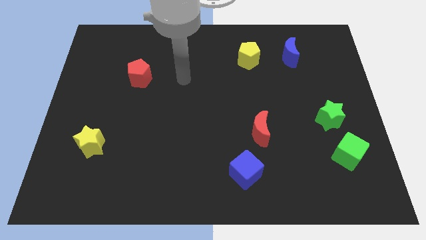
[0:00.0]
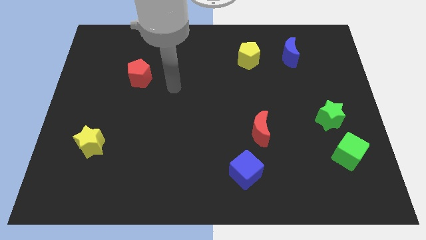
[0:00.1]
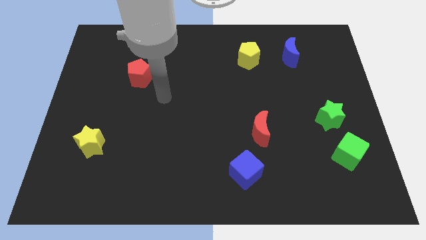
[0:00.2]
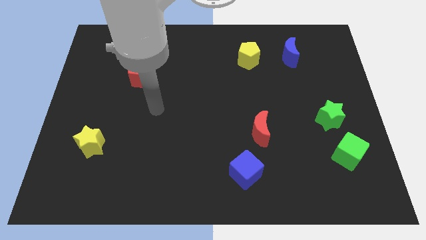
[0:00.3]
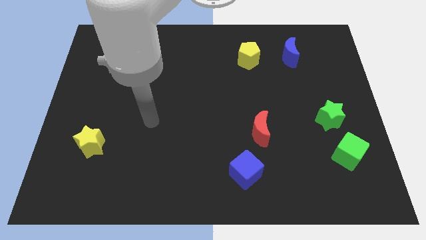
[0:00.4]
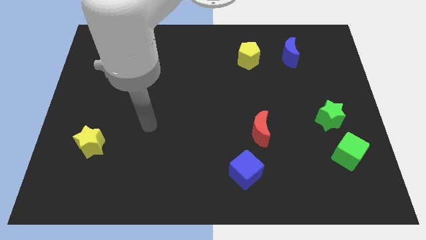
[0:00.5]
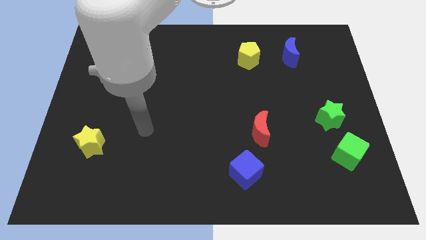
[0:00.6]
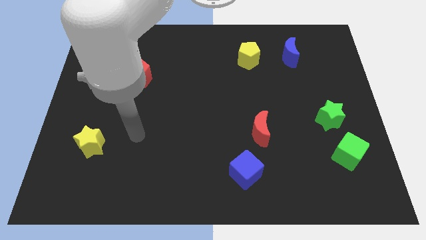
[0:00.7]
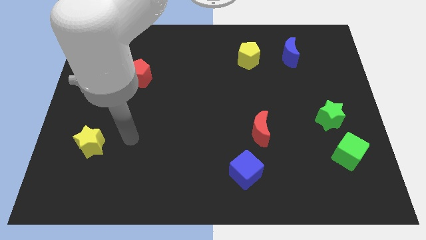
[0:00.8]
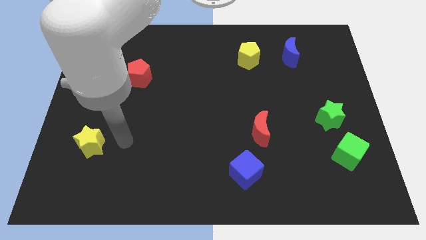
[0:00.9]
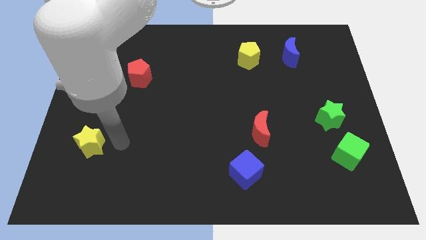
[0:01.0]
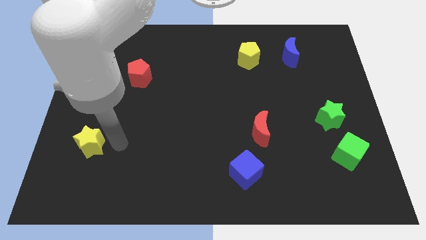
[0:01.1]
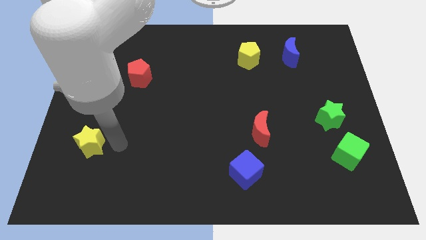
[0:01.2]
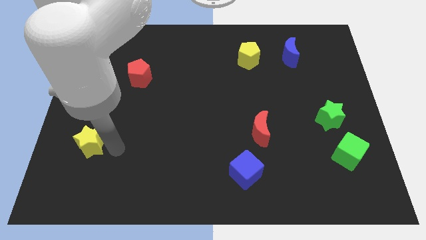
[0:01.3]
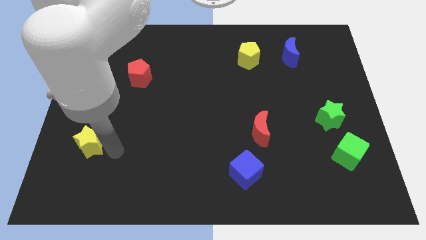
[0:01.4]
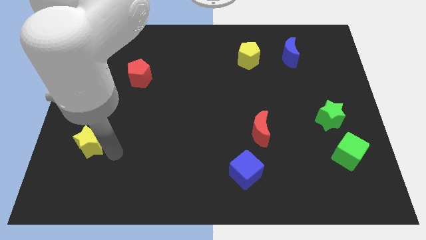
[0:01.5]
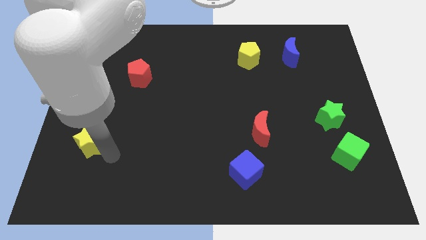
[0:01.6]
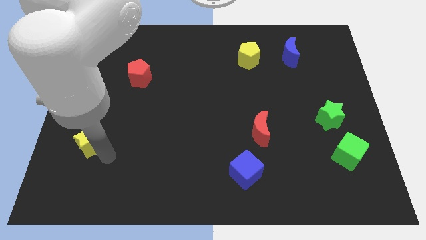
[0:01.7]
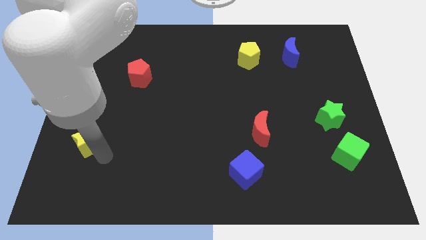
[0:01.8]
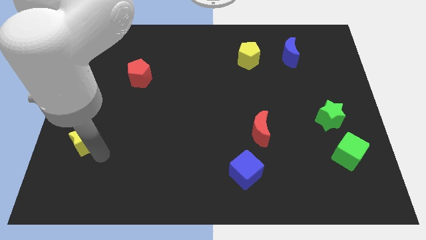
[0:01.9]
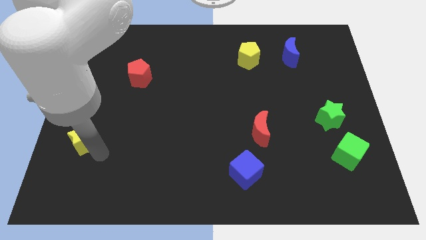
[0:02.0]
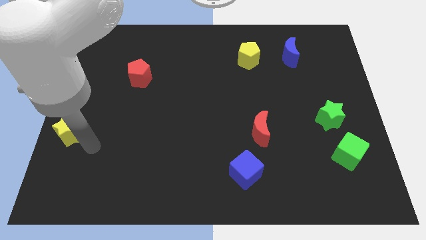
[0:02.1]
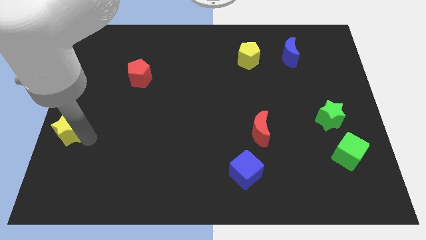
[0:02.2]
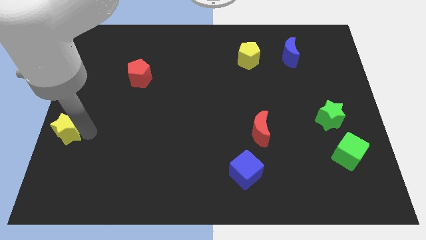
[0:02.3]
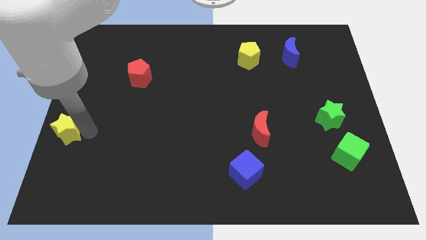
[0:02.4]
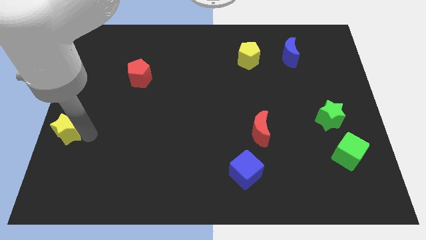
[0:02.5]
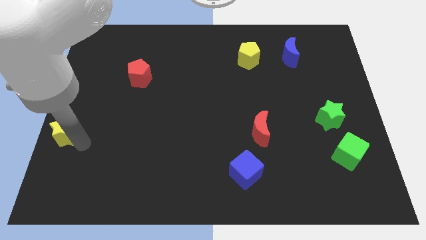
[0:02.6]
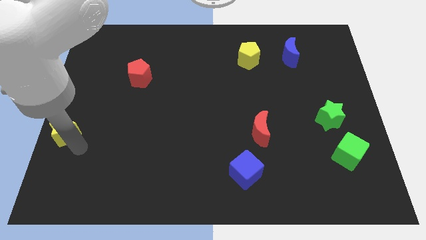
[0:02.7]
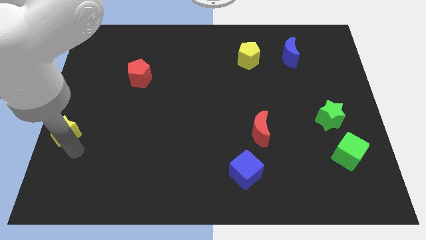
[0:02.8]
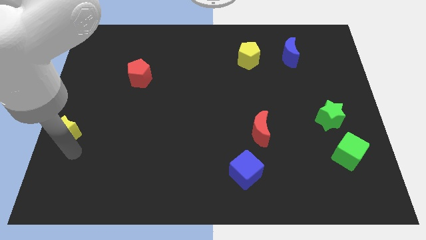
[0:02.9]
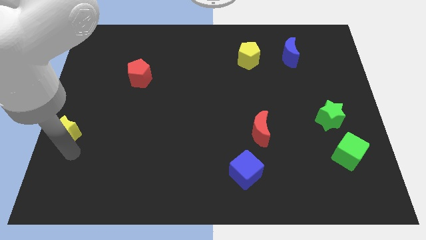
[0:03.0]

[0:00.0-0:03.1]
push the yellow star towards the left side of the board

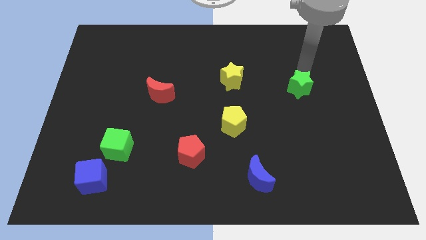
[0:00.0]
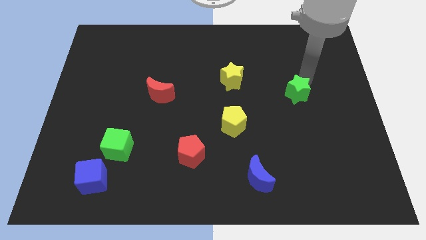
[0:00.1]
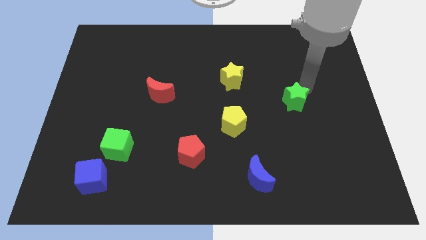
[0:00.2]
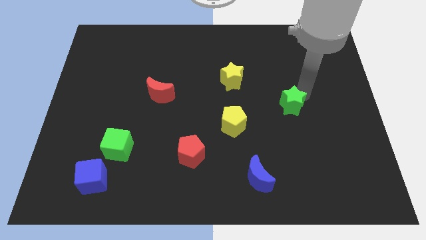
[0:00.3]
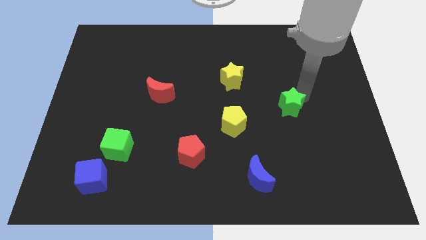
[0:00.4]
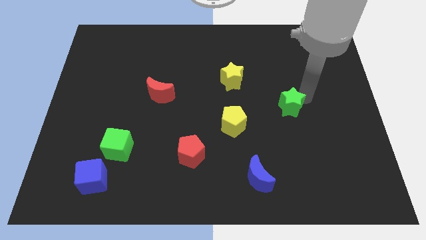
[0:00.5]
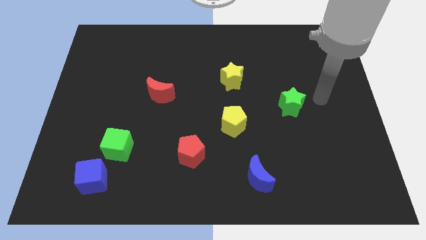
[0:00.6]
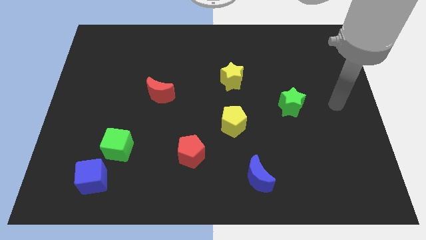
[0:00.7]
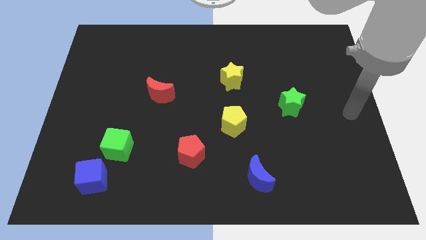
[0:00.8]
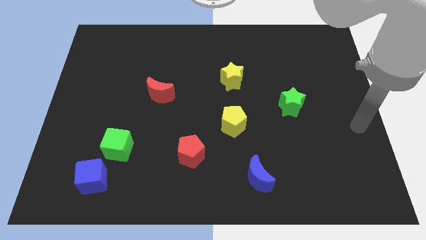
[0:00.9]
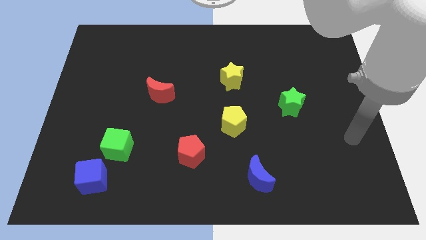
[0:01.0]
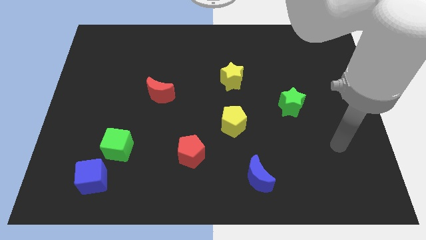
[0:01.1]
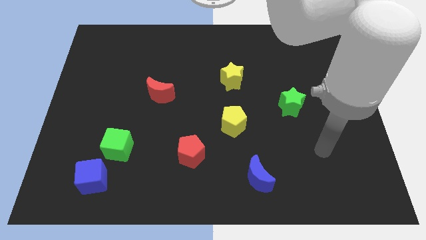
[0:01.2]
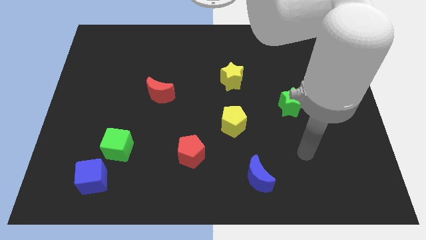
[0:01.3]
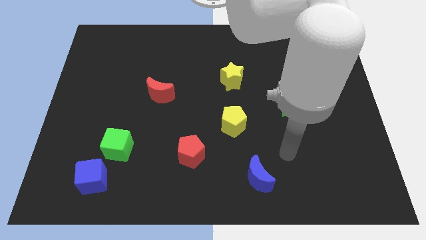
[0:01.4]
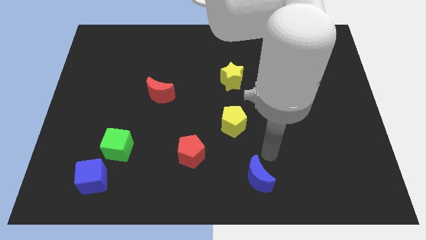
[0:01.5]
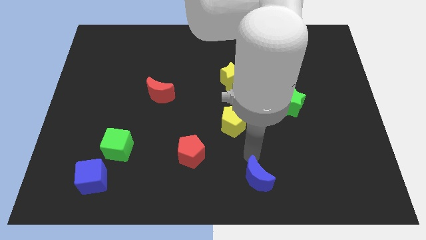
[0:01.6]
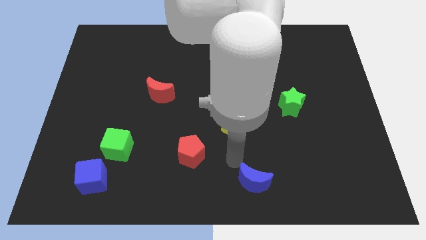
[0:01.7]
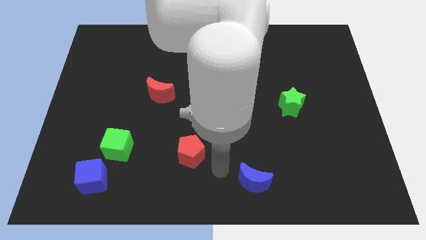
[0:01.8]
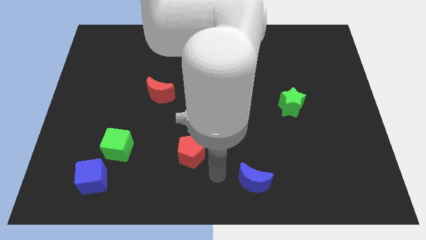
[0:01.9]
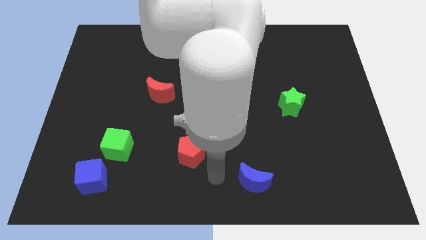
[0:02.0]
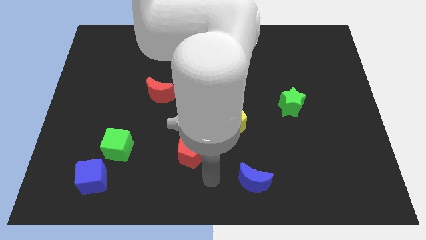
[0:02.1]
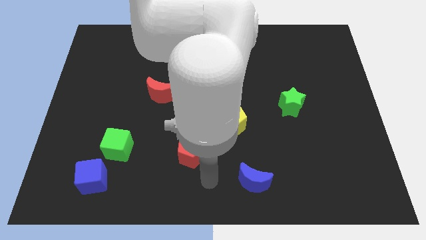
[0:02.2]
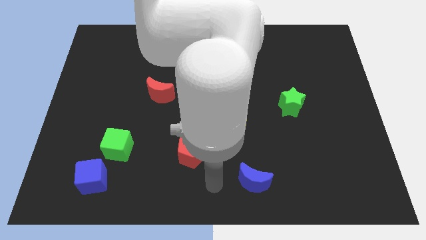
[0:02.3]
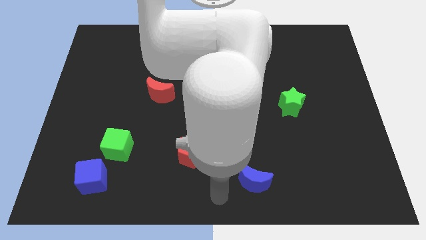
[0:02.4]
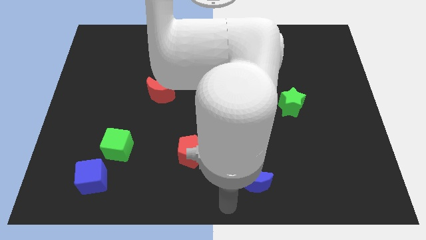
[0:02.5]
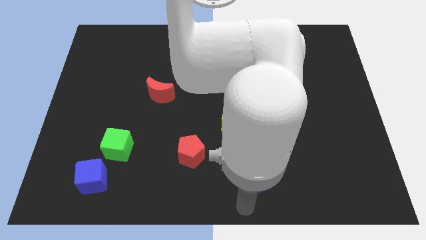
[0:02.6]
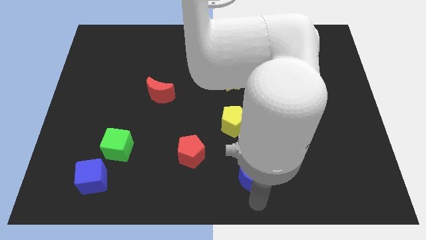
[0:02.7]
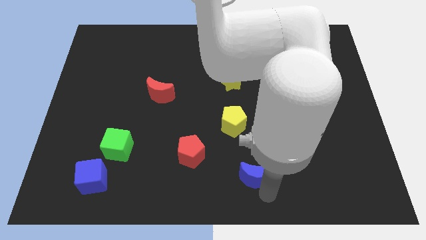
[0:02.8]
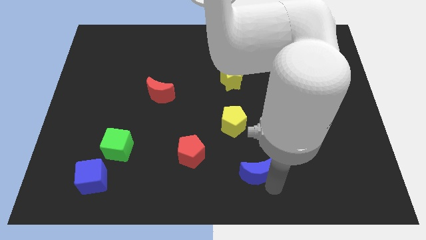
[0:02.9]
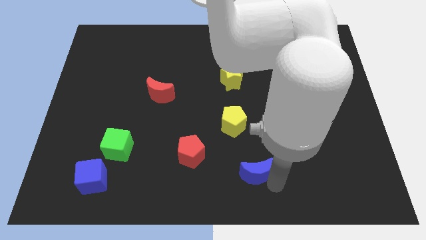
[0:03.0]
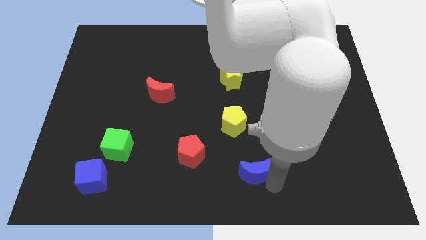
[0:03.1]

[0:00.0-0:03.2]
move your arm to the bottom of the blue crescent

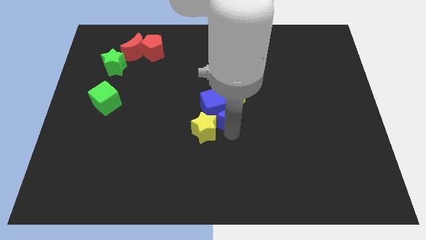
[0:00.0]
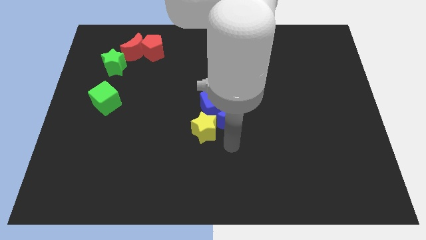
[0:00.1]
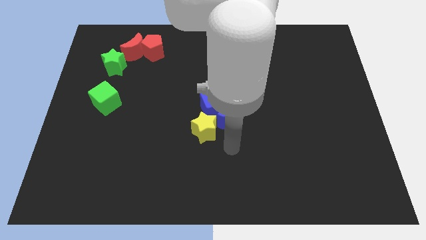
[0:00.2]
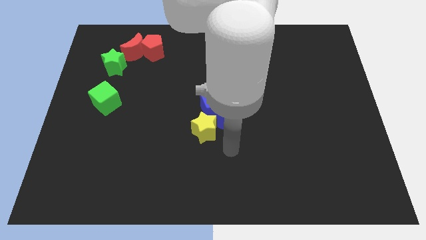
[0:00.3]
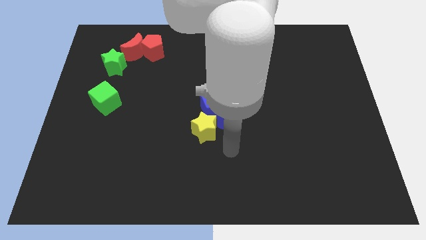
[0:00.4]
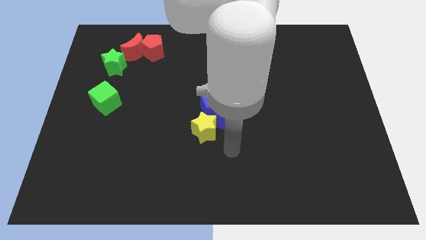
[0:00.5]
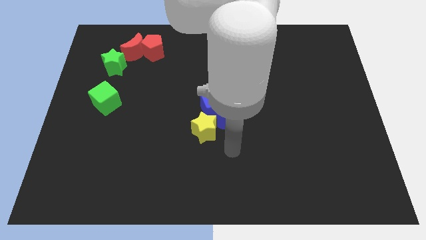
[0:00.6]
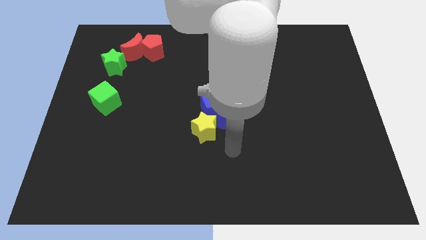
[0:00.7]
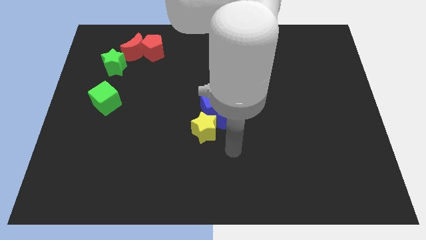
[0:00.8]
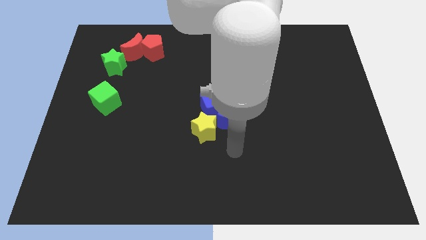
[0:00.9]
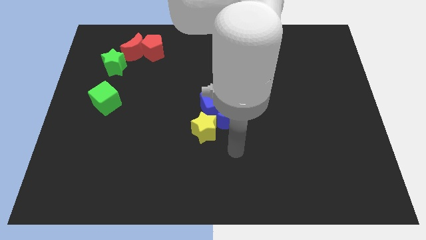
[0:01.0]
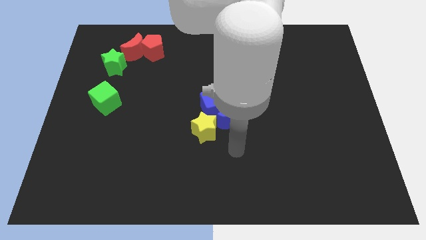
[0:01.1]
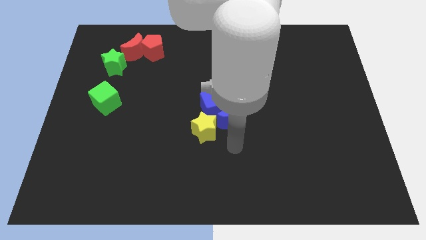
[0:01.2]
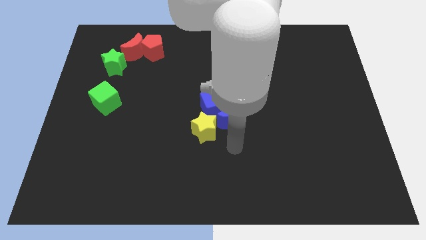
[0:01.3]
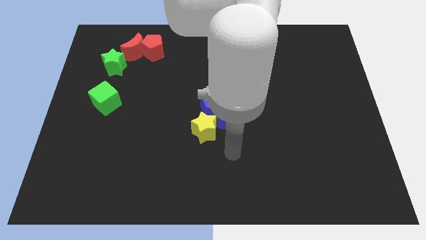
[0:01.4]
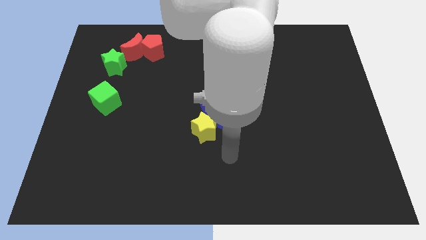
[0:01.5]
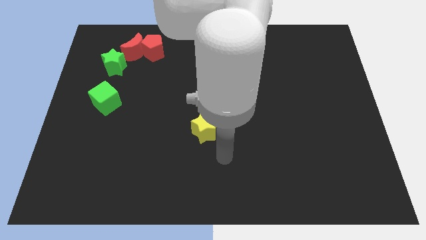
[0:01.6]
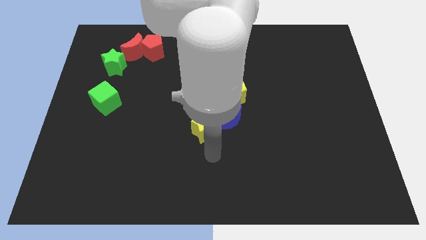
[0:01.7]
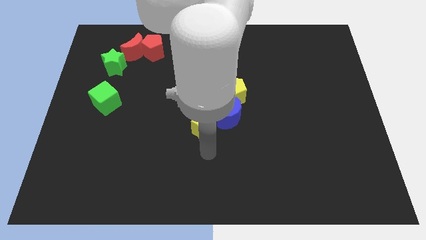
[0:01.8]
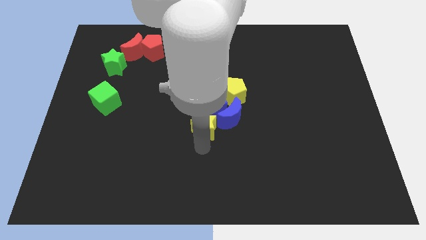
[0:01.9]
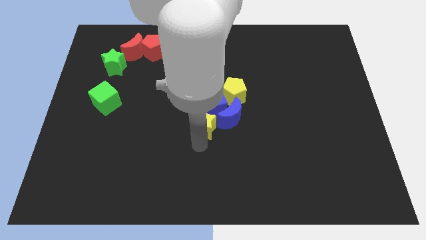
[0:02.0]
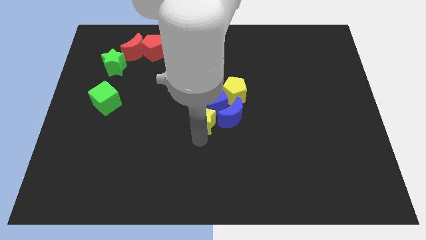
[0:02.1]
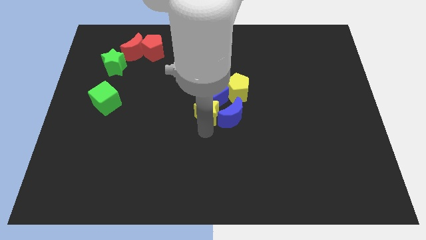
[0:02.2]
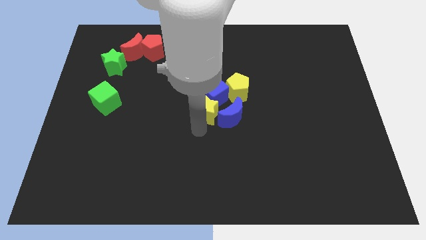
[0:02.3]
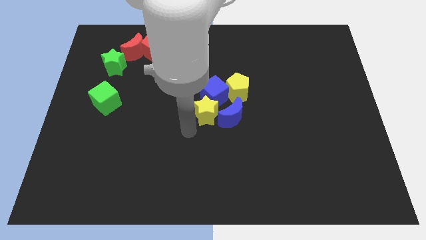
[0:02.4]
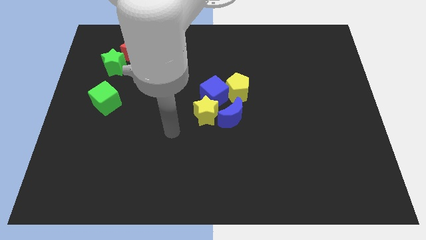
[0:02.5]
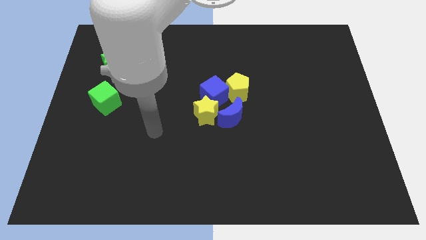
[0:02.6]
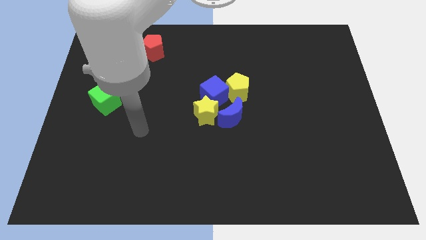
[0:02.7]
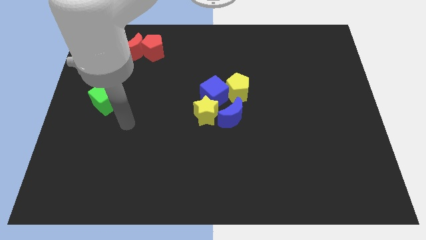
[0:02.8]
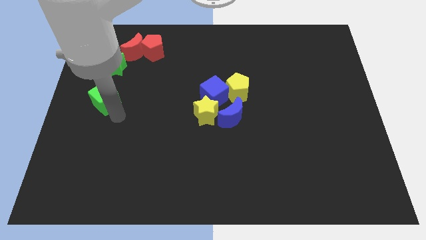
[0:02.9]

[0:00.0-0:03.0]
slide the yellow star up slightly
